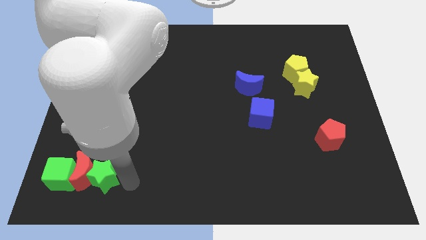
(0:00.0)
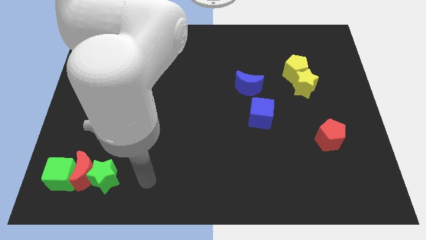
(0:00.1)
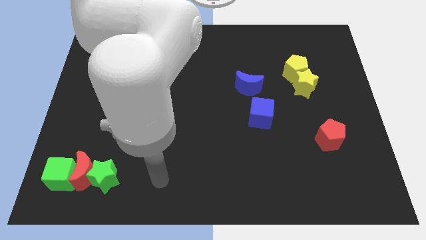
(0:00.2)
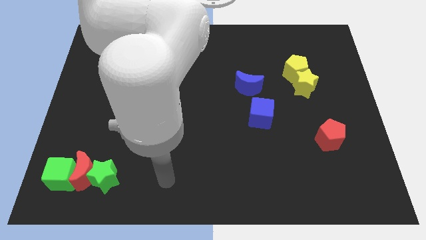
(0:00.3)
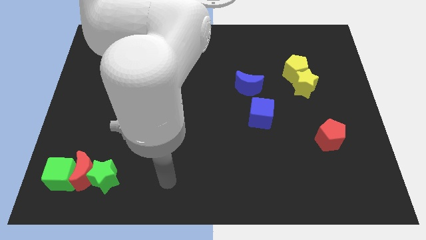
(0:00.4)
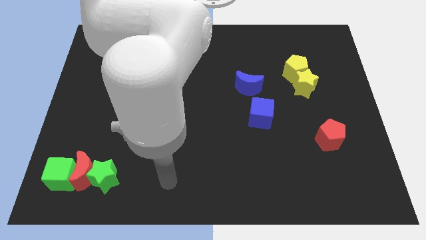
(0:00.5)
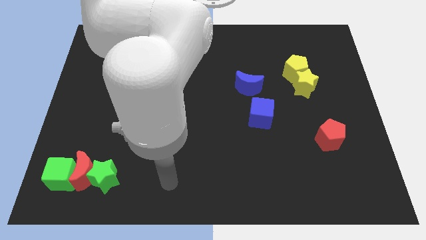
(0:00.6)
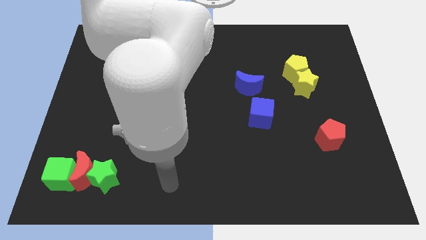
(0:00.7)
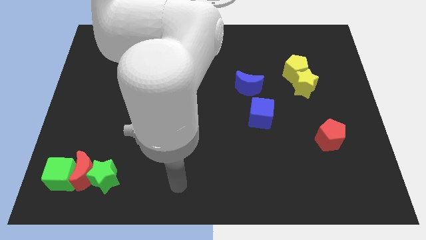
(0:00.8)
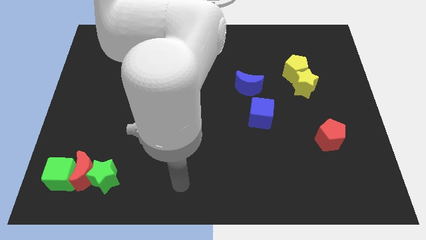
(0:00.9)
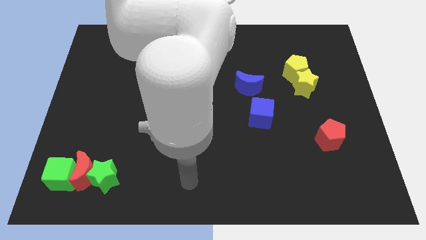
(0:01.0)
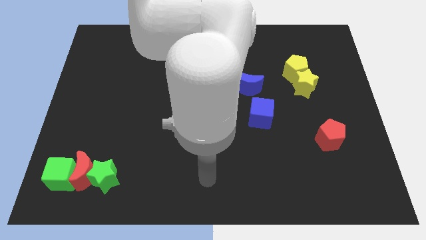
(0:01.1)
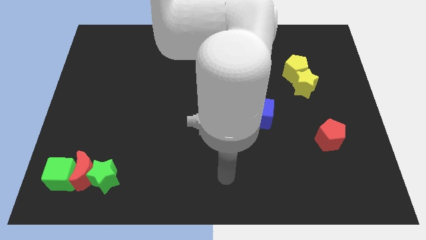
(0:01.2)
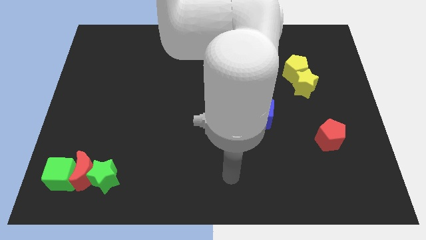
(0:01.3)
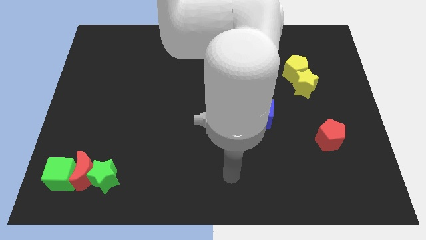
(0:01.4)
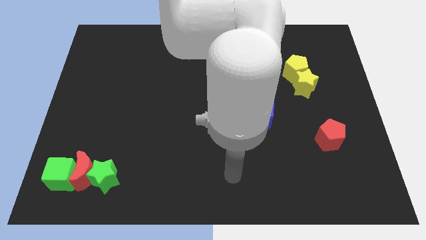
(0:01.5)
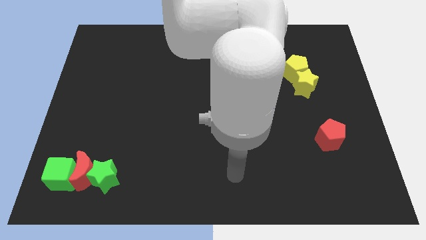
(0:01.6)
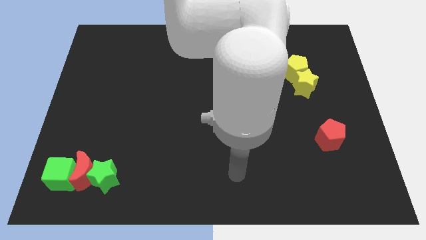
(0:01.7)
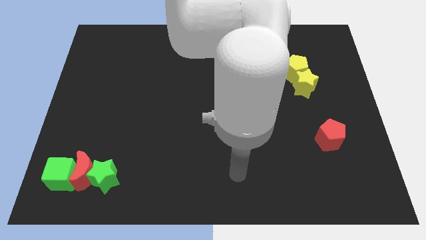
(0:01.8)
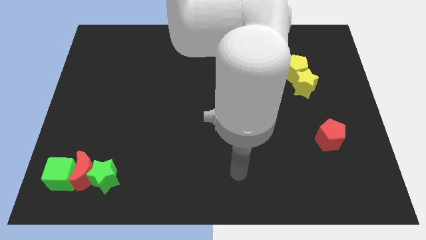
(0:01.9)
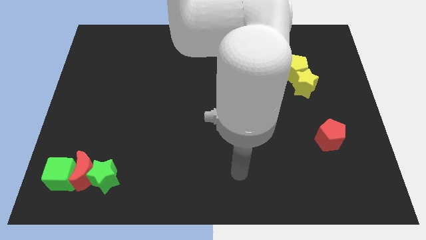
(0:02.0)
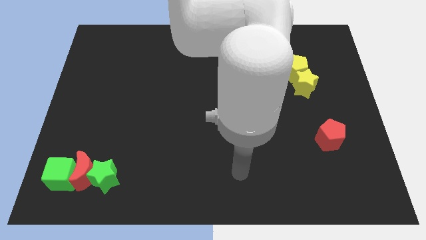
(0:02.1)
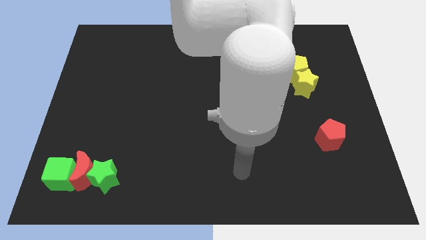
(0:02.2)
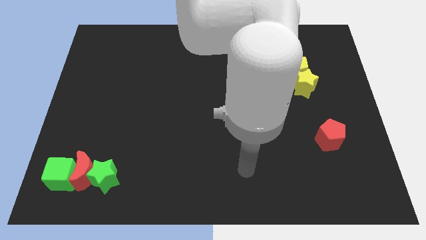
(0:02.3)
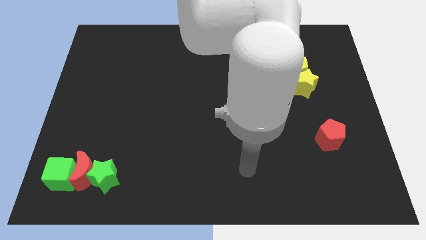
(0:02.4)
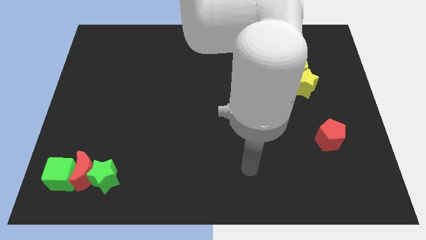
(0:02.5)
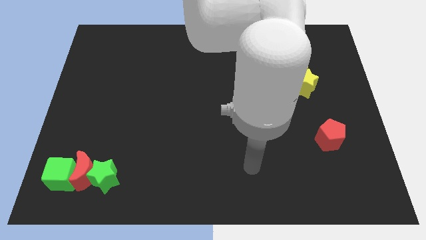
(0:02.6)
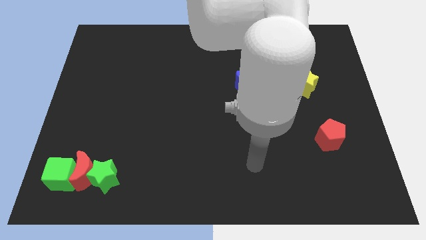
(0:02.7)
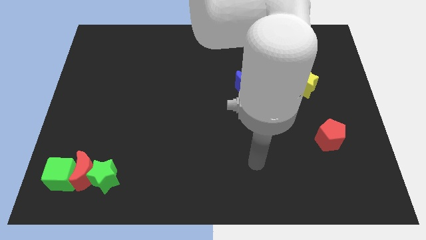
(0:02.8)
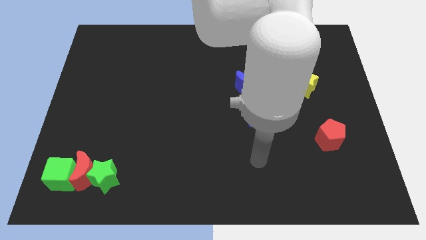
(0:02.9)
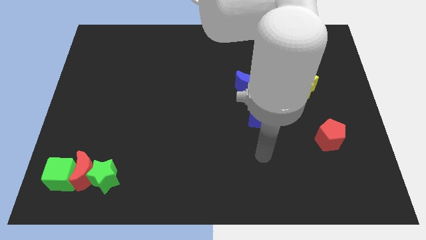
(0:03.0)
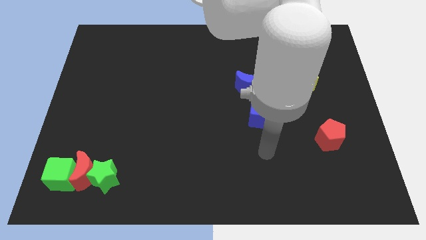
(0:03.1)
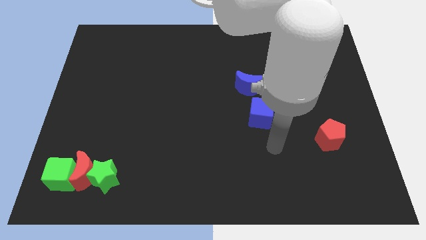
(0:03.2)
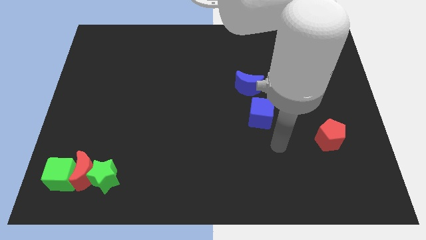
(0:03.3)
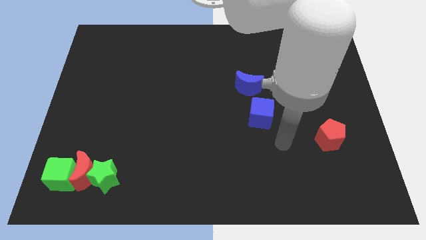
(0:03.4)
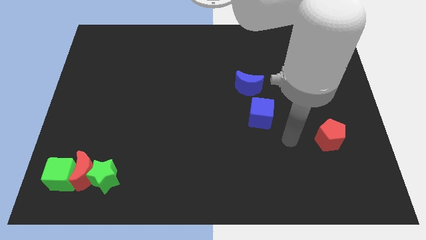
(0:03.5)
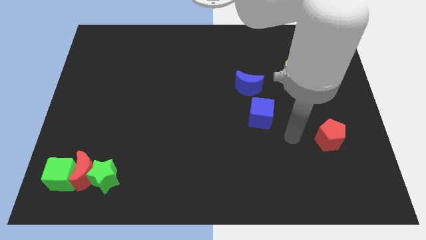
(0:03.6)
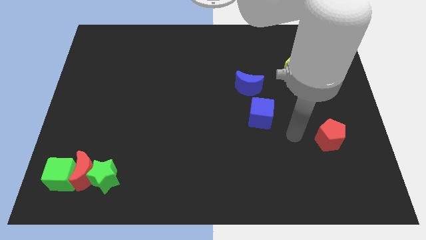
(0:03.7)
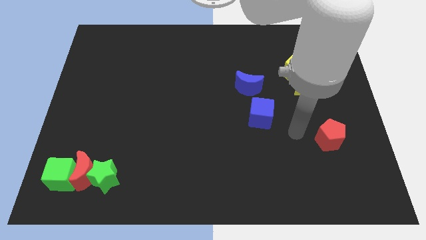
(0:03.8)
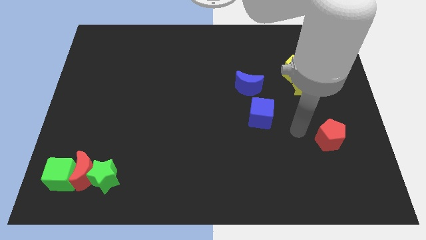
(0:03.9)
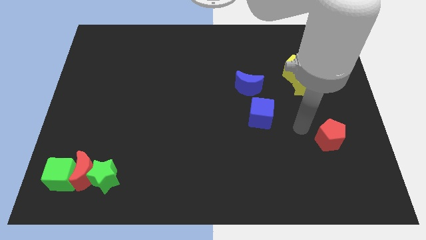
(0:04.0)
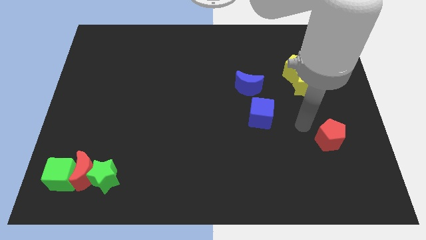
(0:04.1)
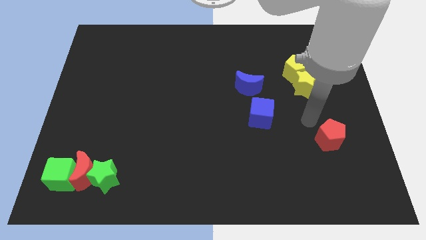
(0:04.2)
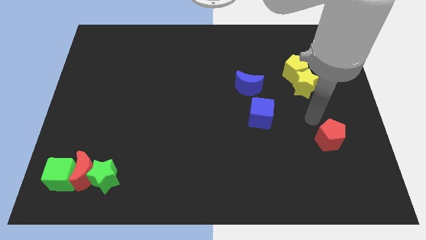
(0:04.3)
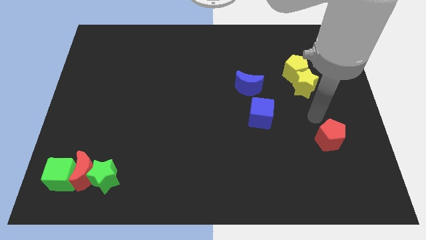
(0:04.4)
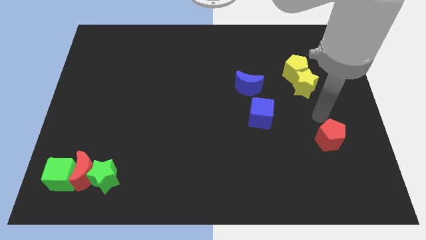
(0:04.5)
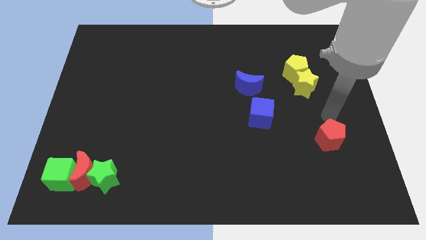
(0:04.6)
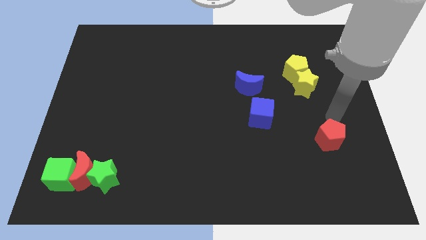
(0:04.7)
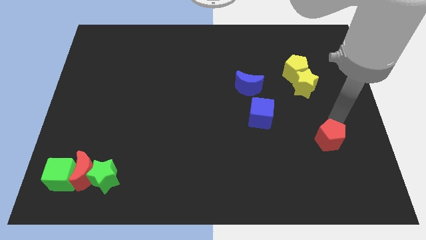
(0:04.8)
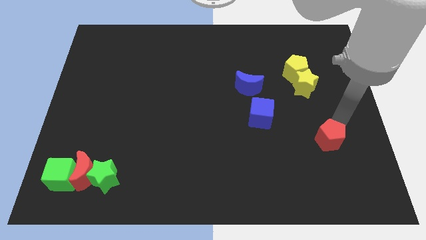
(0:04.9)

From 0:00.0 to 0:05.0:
move arm to the top of red pentagon

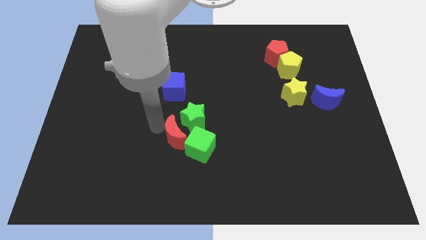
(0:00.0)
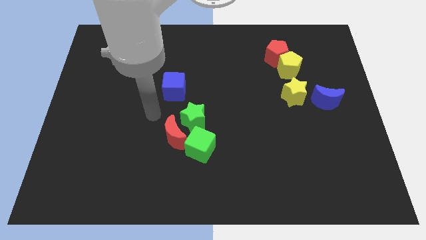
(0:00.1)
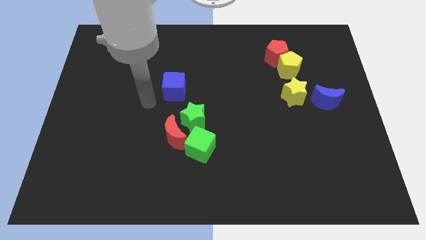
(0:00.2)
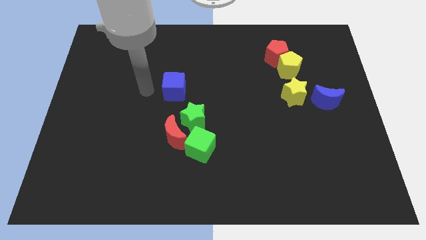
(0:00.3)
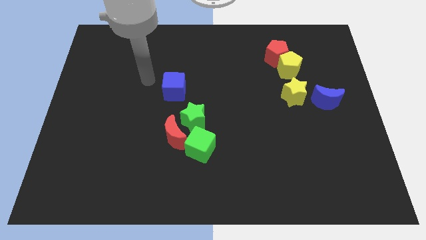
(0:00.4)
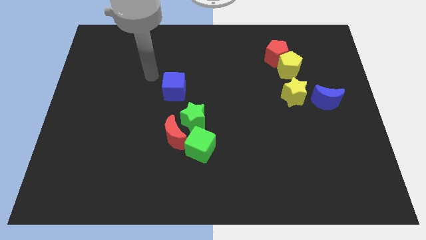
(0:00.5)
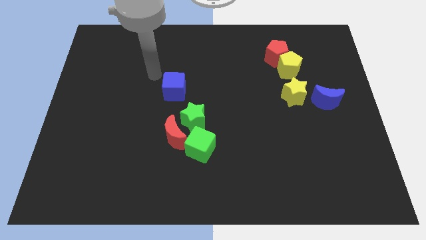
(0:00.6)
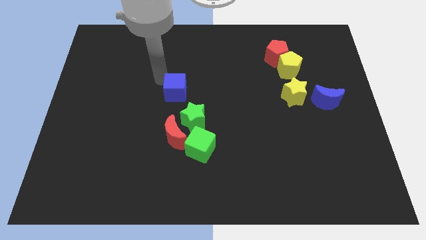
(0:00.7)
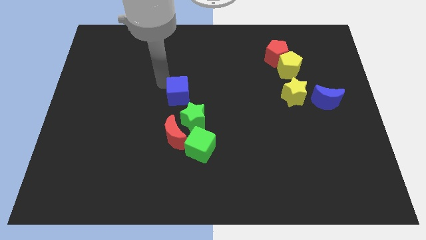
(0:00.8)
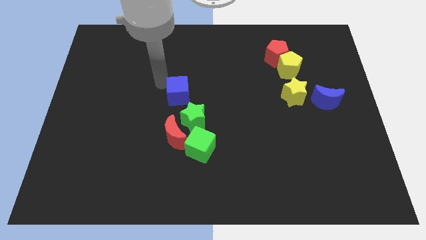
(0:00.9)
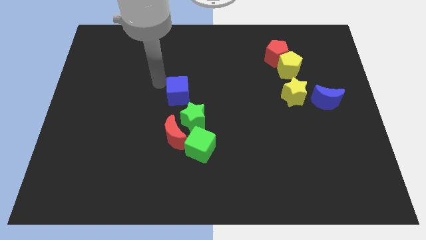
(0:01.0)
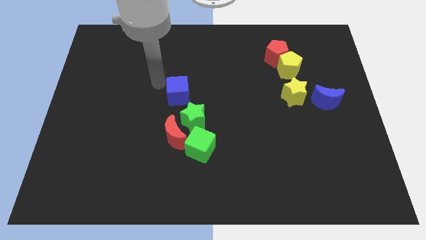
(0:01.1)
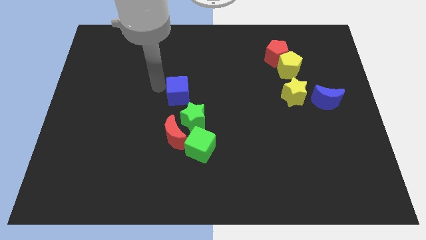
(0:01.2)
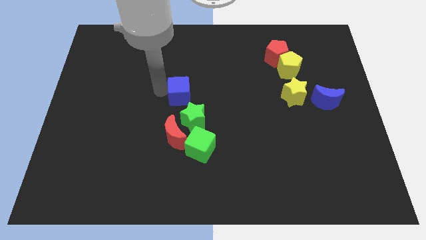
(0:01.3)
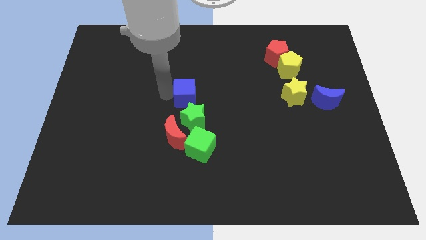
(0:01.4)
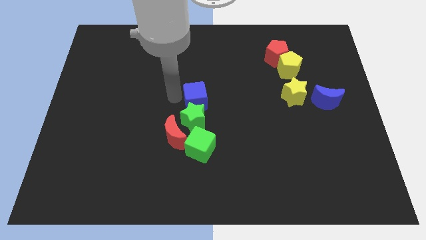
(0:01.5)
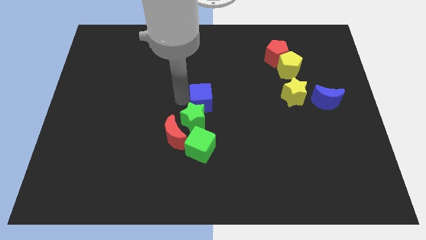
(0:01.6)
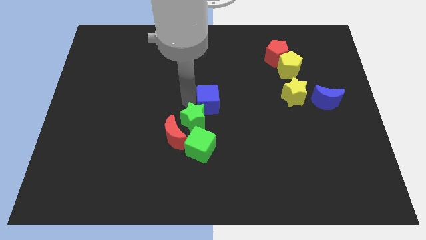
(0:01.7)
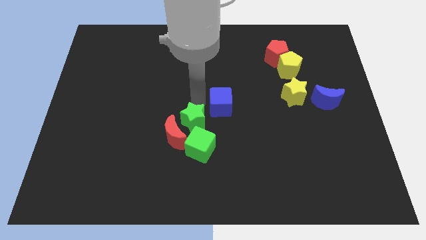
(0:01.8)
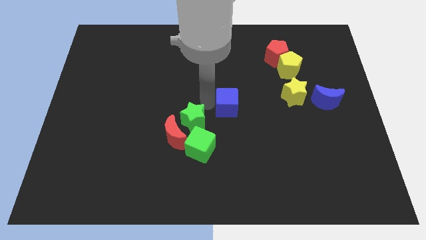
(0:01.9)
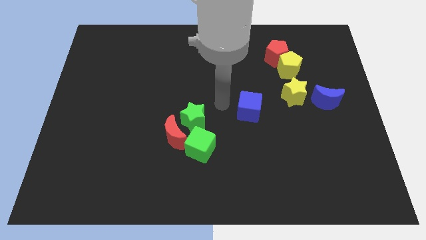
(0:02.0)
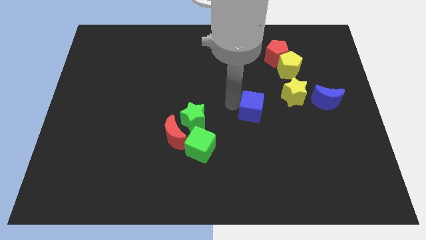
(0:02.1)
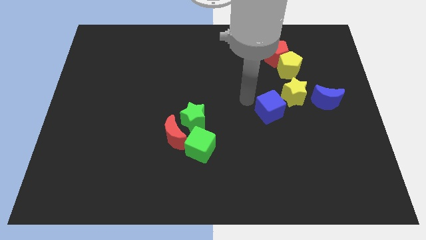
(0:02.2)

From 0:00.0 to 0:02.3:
move the blue cube towards the yellow star

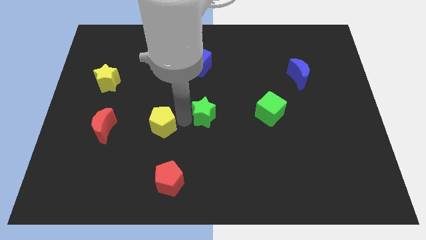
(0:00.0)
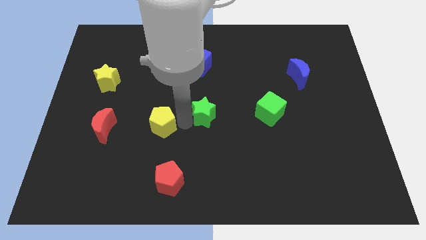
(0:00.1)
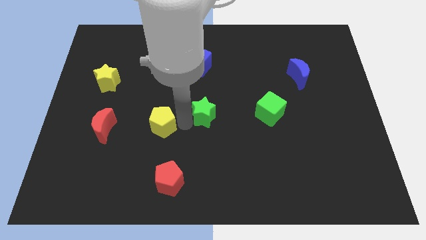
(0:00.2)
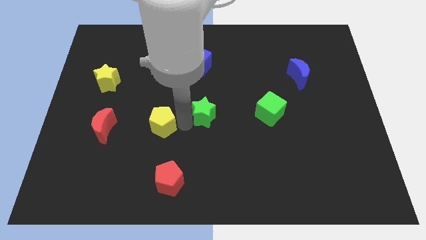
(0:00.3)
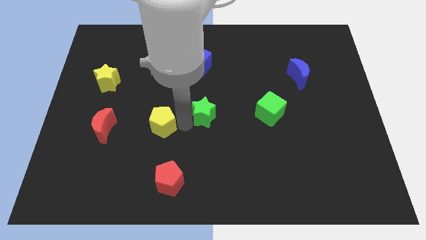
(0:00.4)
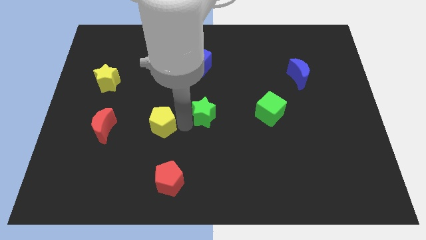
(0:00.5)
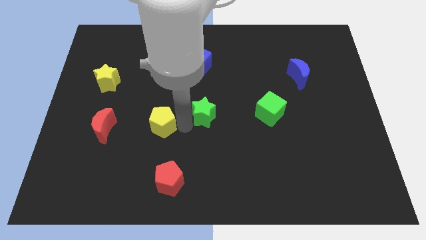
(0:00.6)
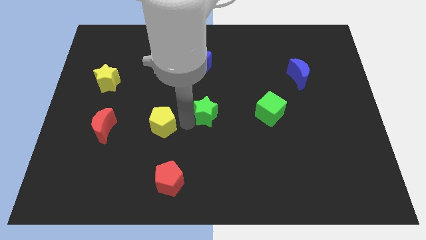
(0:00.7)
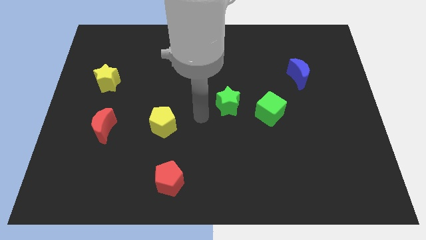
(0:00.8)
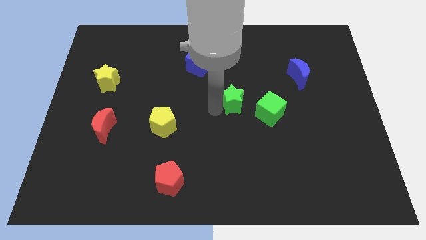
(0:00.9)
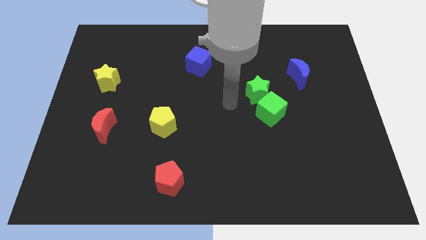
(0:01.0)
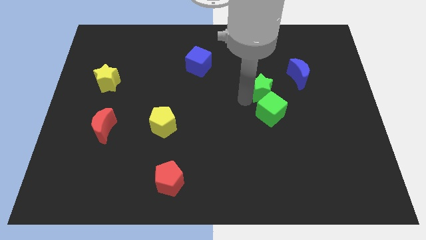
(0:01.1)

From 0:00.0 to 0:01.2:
push green star above green cube

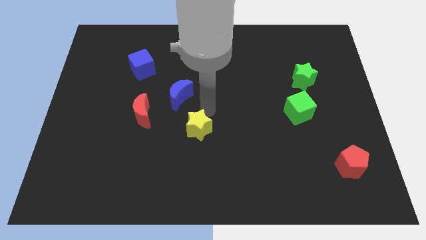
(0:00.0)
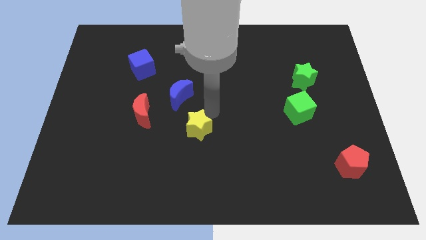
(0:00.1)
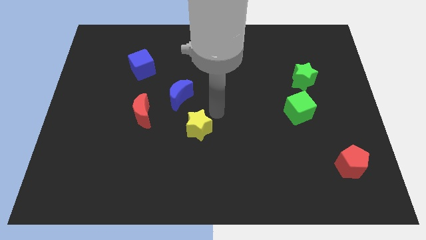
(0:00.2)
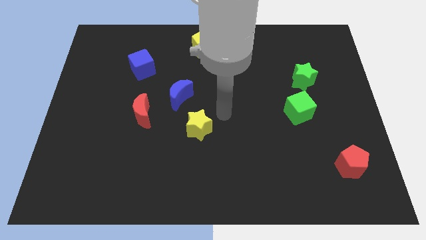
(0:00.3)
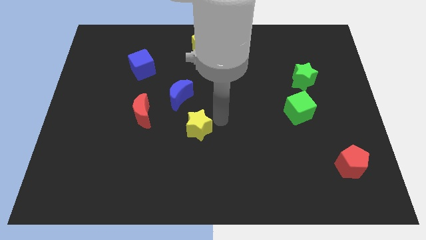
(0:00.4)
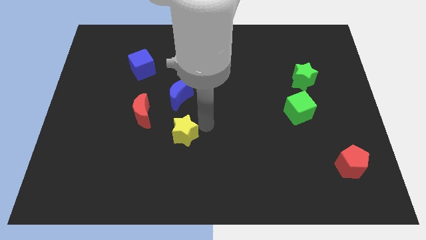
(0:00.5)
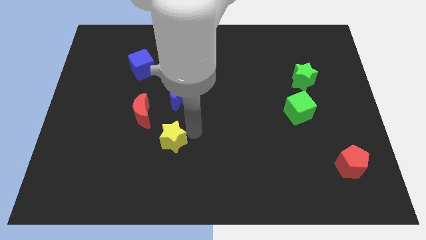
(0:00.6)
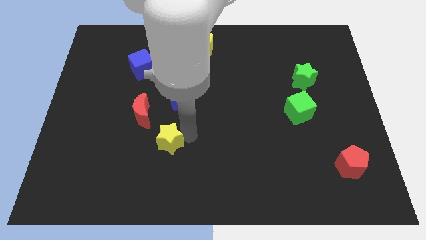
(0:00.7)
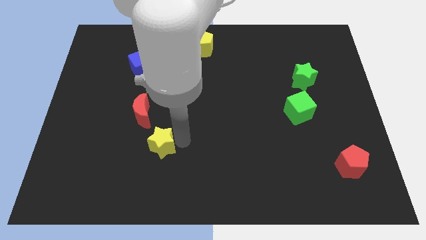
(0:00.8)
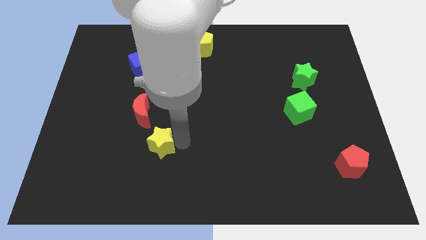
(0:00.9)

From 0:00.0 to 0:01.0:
push yellow star towards the bottom of the red crescent
